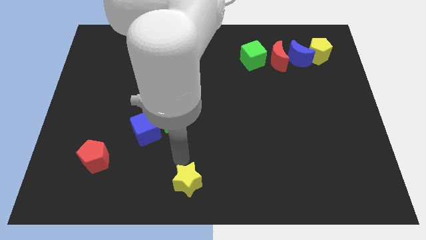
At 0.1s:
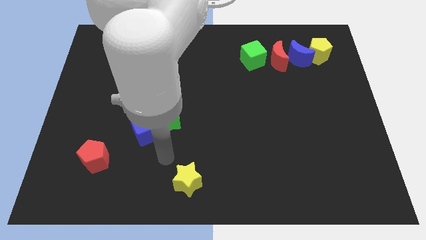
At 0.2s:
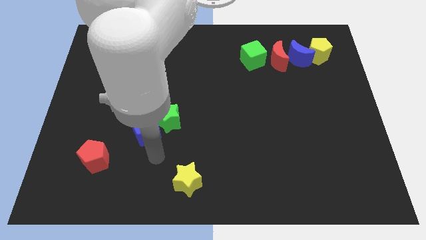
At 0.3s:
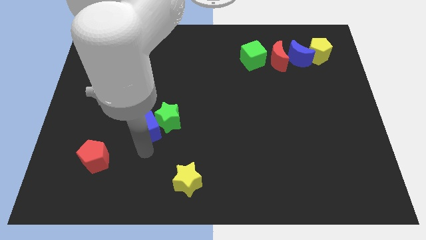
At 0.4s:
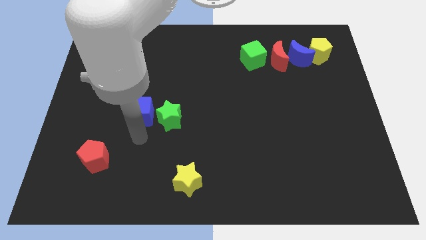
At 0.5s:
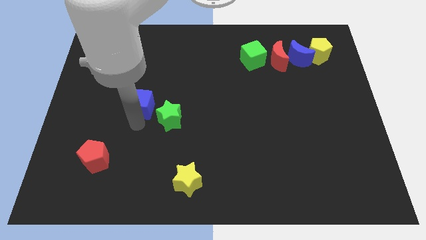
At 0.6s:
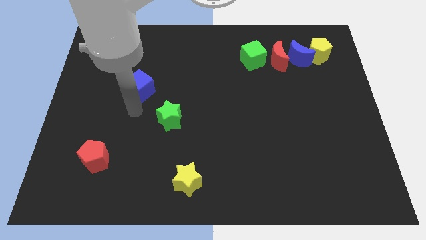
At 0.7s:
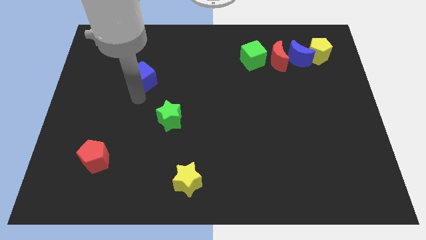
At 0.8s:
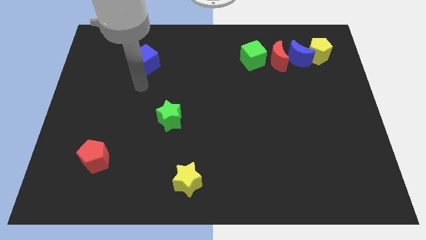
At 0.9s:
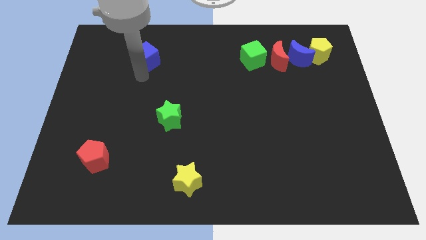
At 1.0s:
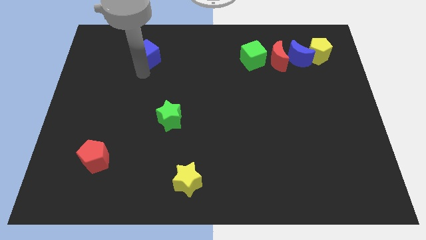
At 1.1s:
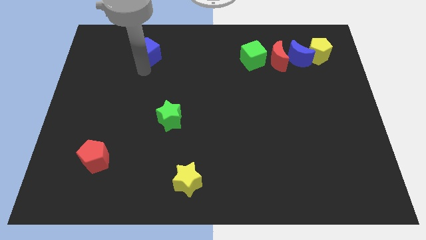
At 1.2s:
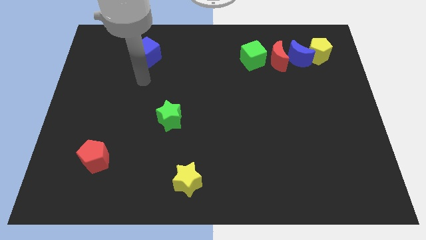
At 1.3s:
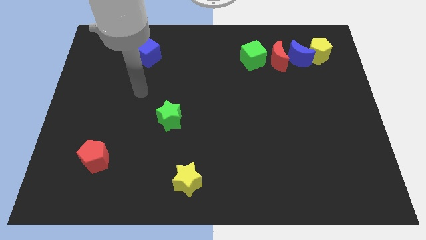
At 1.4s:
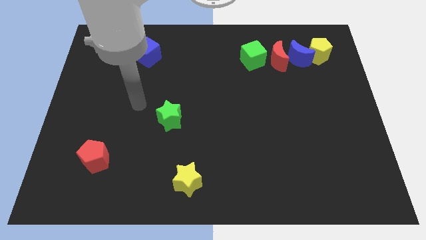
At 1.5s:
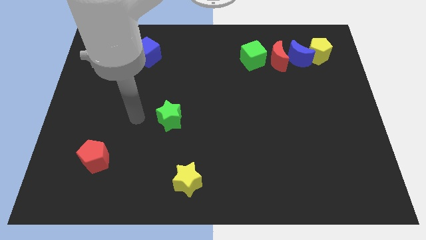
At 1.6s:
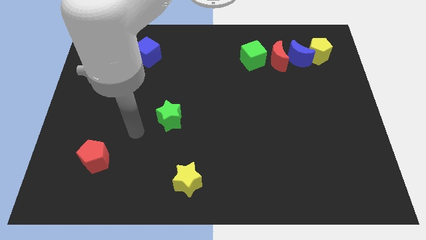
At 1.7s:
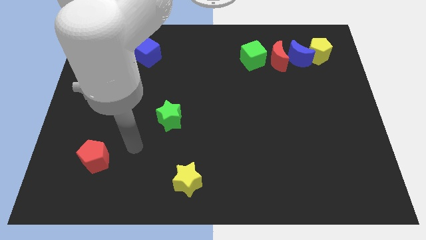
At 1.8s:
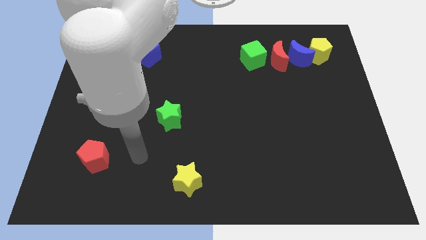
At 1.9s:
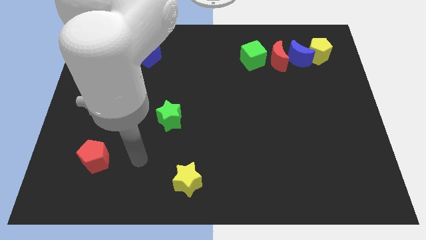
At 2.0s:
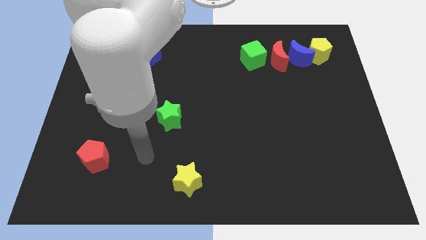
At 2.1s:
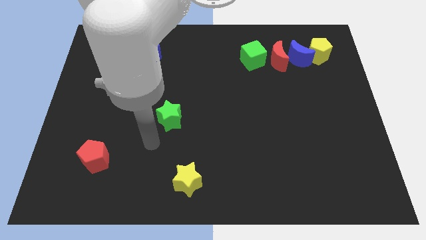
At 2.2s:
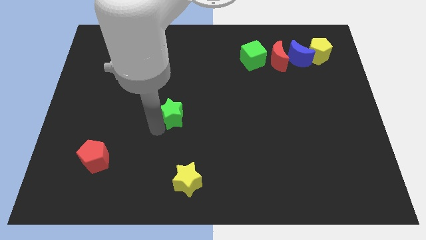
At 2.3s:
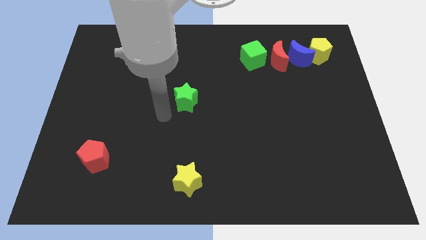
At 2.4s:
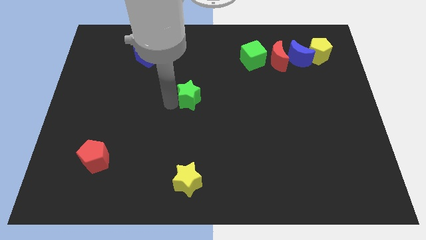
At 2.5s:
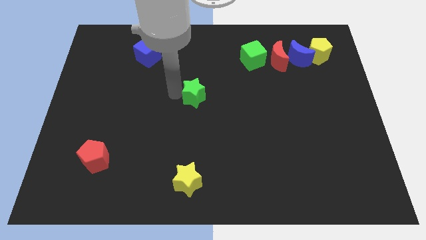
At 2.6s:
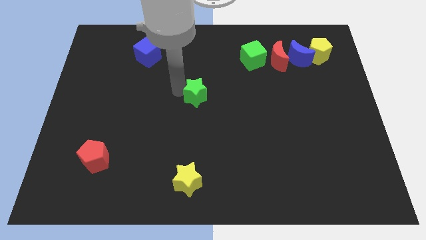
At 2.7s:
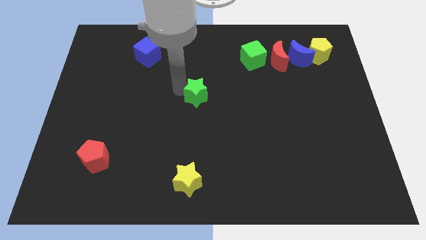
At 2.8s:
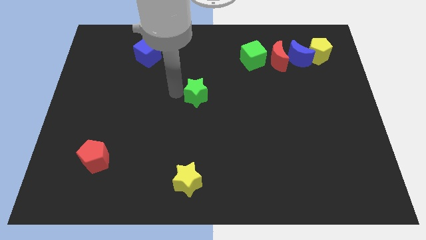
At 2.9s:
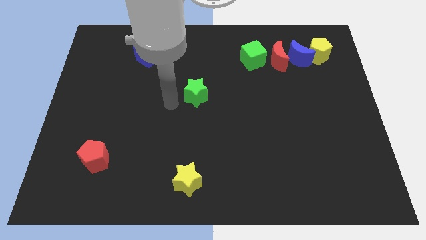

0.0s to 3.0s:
place the green star diagonally bottom right to the blue cube

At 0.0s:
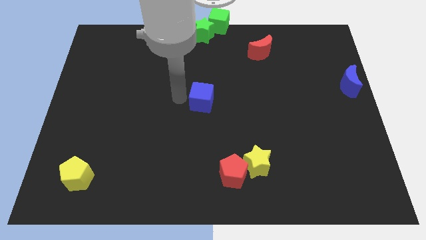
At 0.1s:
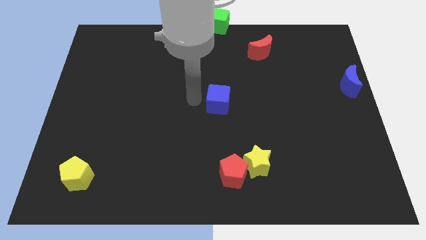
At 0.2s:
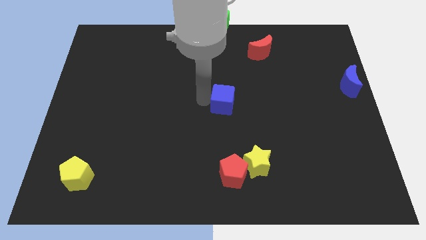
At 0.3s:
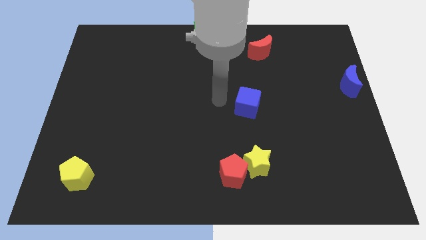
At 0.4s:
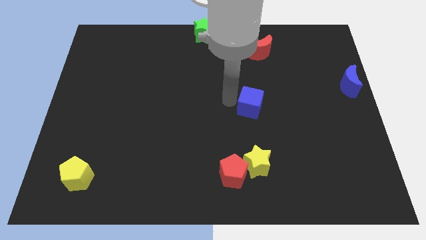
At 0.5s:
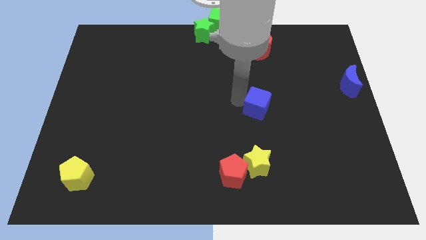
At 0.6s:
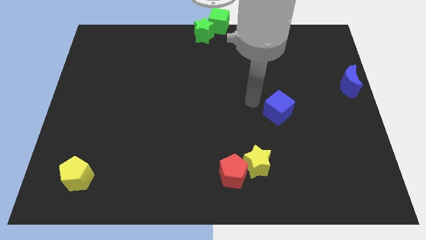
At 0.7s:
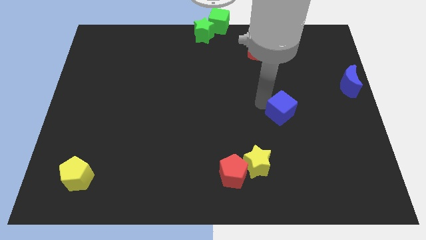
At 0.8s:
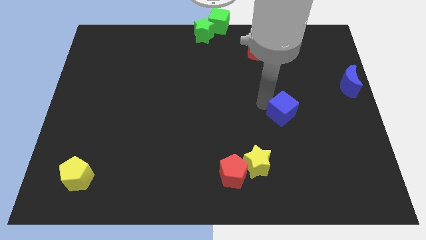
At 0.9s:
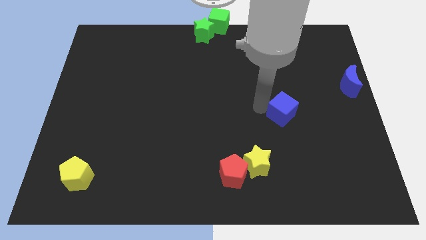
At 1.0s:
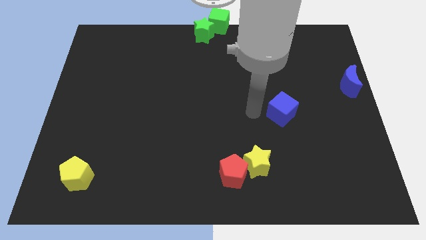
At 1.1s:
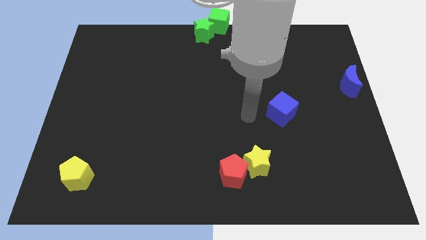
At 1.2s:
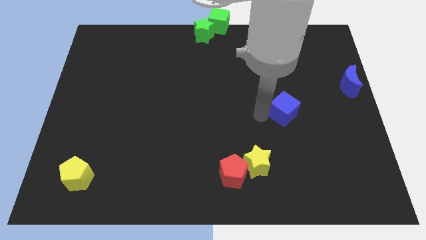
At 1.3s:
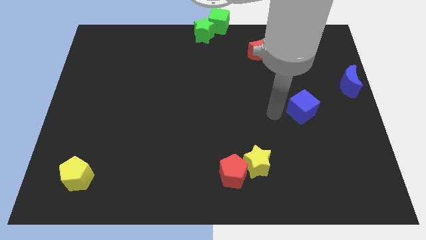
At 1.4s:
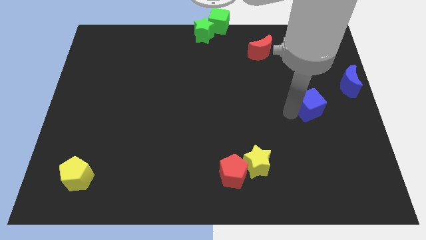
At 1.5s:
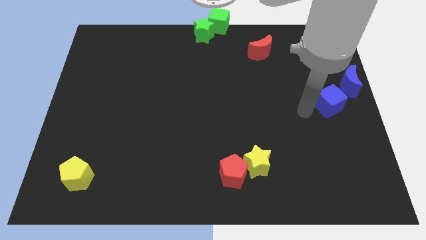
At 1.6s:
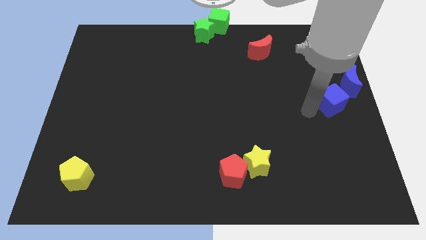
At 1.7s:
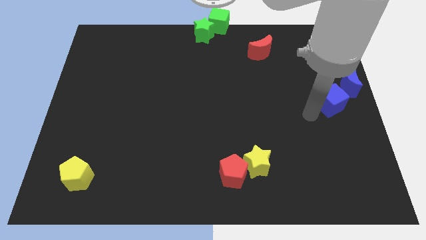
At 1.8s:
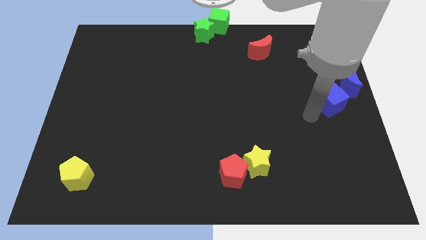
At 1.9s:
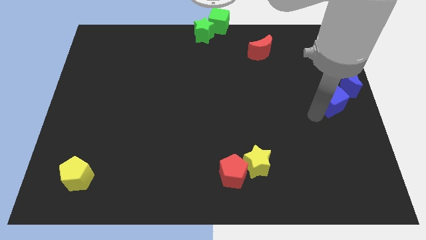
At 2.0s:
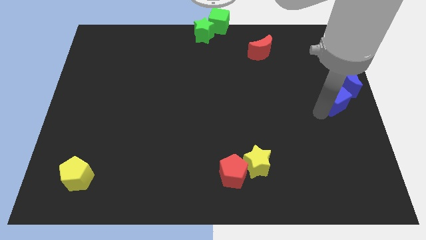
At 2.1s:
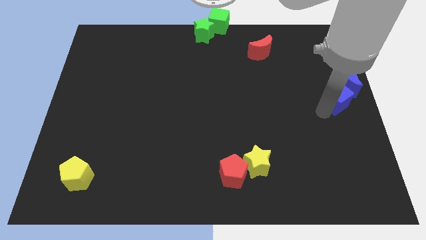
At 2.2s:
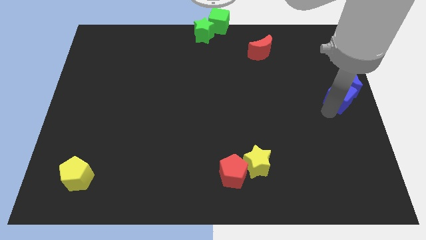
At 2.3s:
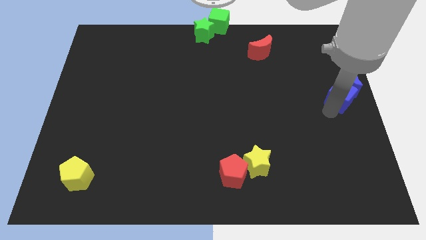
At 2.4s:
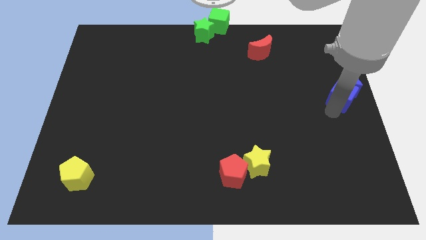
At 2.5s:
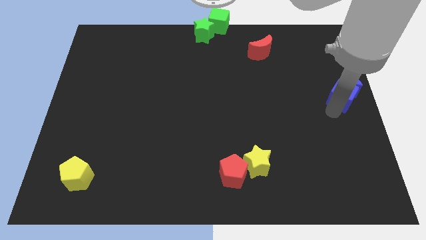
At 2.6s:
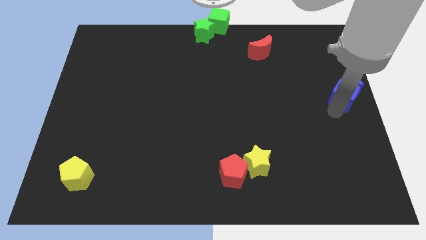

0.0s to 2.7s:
drag blue cube to the bottom left of the blue moon

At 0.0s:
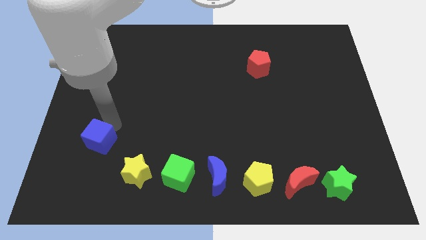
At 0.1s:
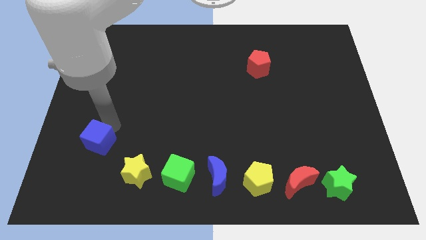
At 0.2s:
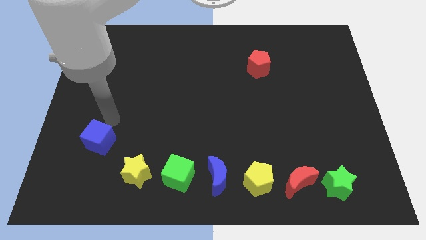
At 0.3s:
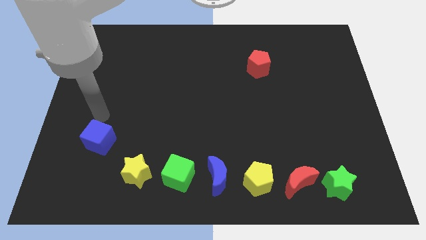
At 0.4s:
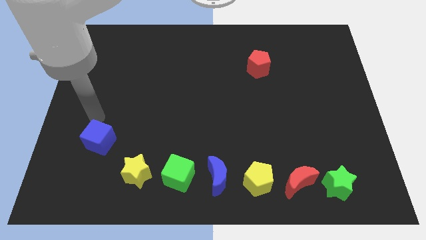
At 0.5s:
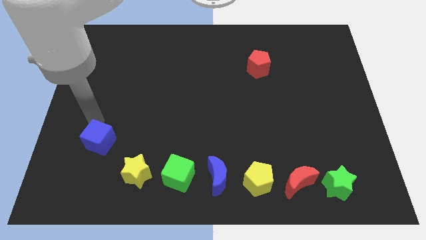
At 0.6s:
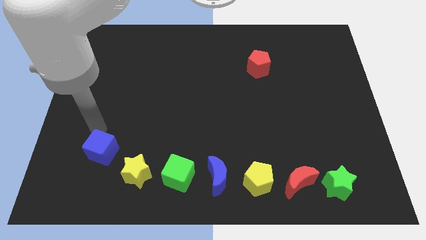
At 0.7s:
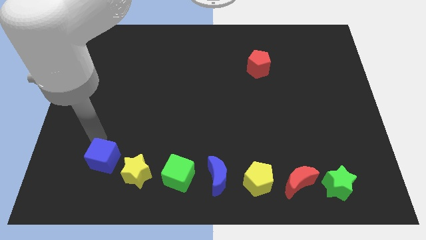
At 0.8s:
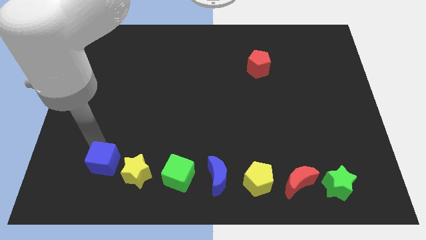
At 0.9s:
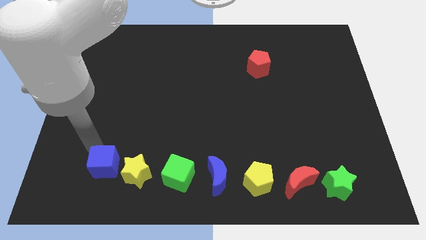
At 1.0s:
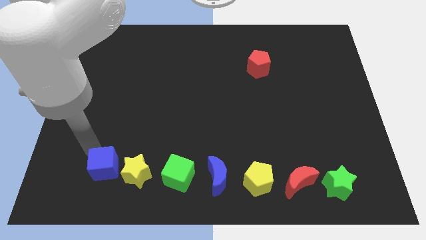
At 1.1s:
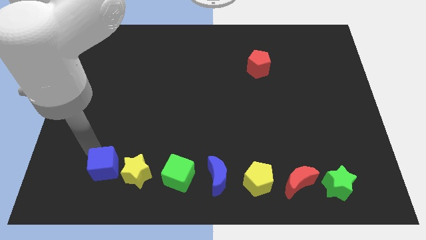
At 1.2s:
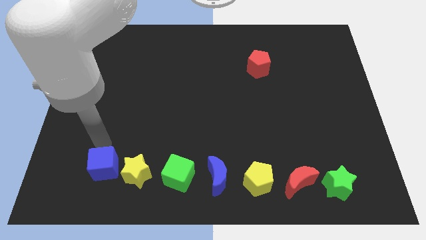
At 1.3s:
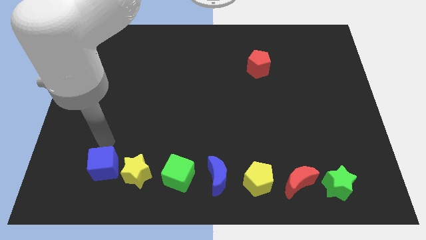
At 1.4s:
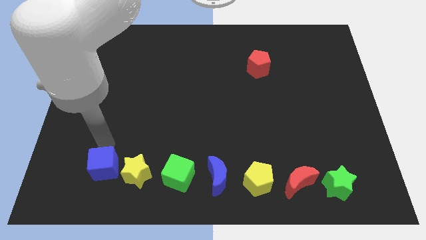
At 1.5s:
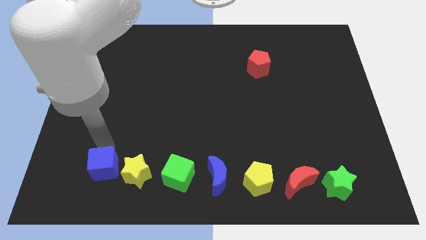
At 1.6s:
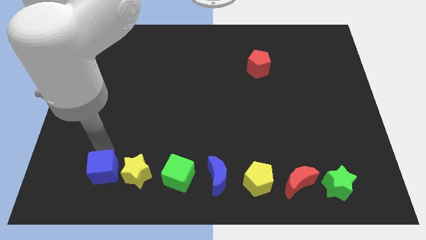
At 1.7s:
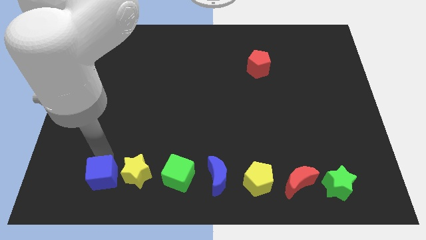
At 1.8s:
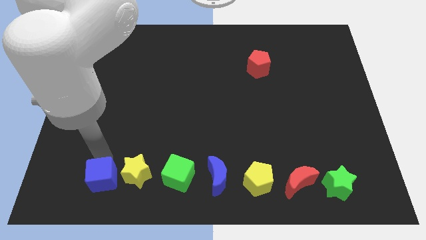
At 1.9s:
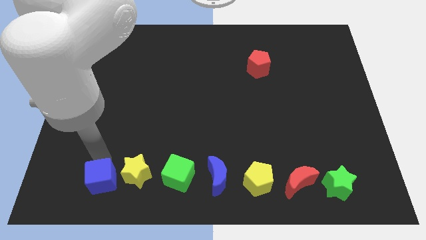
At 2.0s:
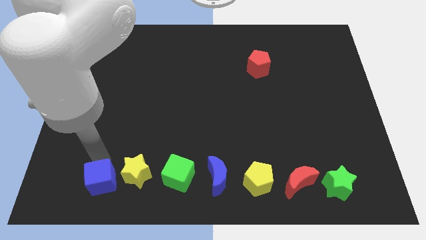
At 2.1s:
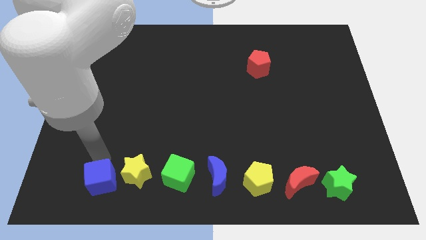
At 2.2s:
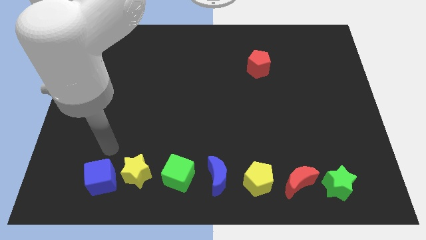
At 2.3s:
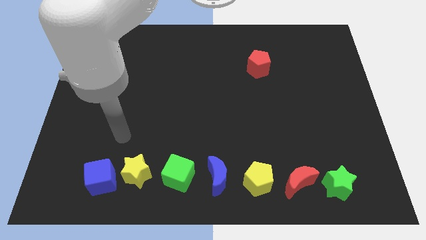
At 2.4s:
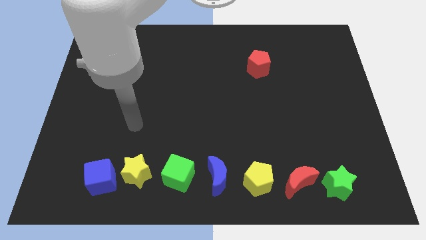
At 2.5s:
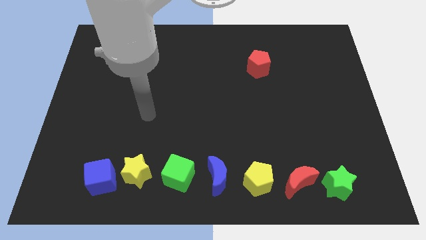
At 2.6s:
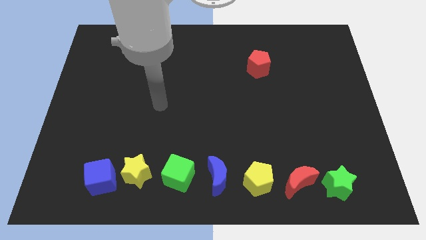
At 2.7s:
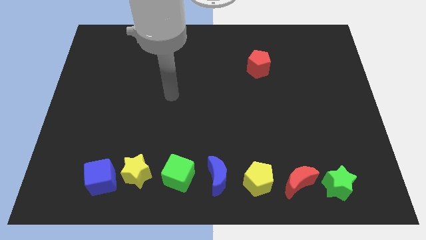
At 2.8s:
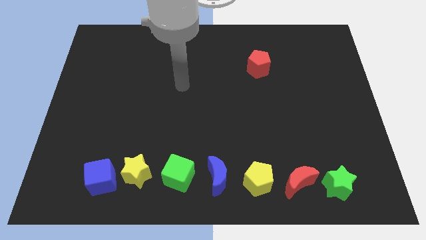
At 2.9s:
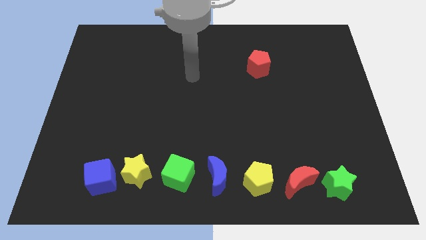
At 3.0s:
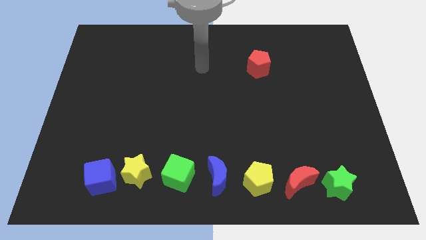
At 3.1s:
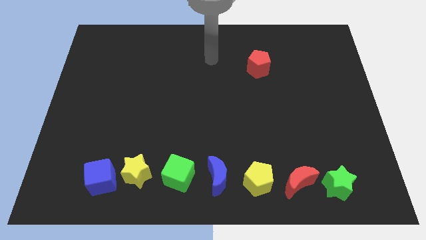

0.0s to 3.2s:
place blue cube to the left of yellow star
